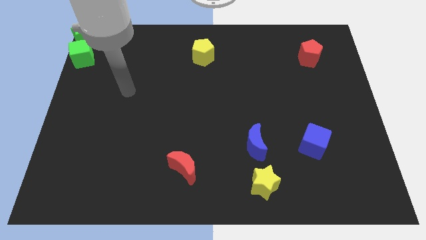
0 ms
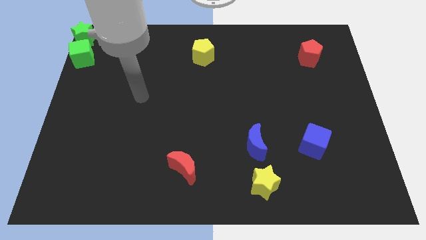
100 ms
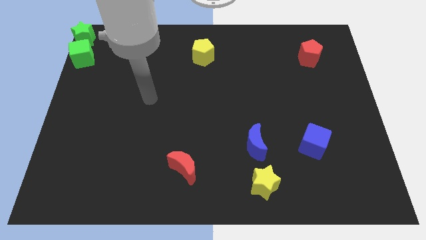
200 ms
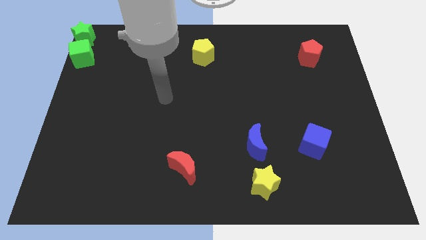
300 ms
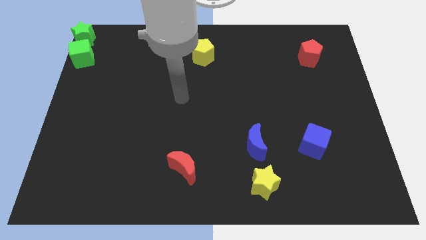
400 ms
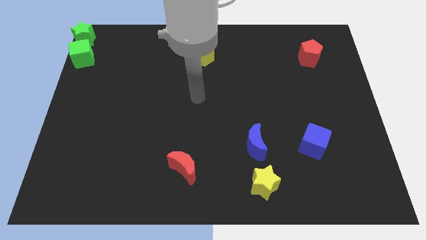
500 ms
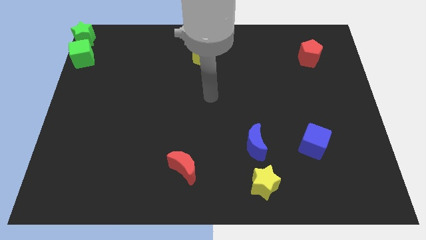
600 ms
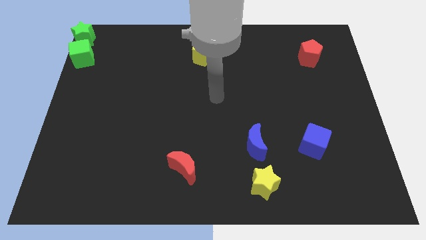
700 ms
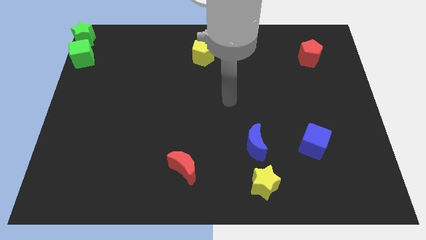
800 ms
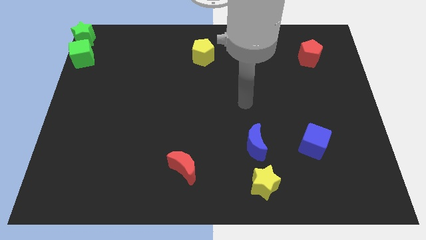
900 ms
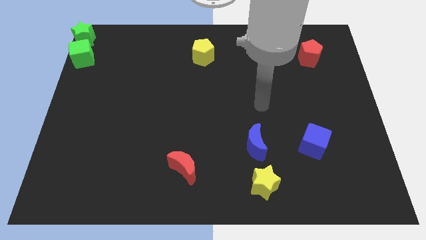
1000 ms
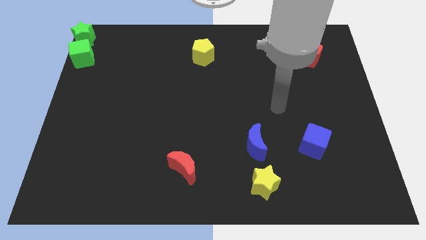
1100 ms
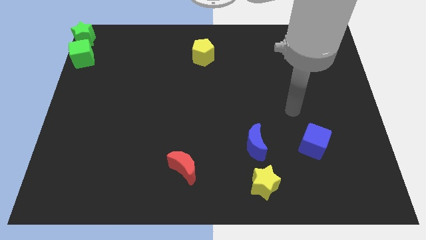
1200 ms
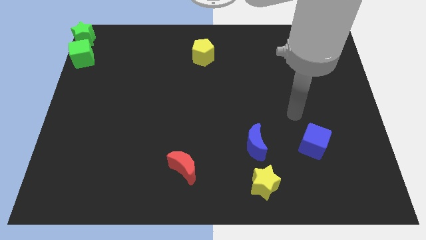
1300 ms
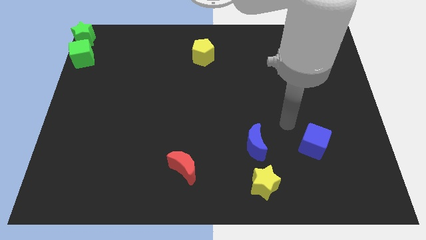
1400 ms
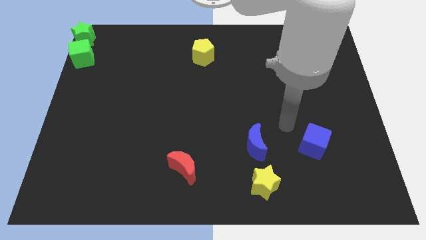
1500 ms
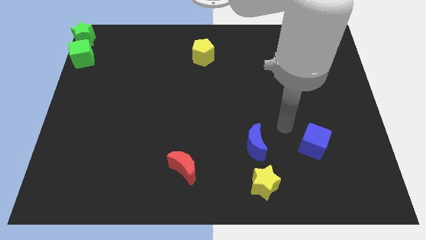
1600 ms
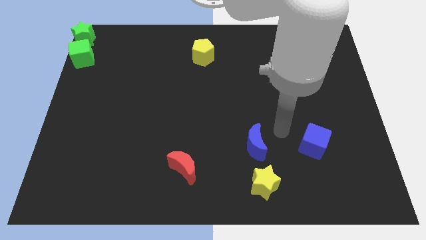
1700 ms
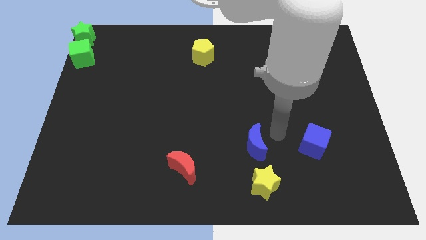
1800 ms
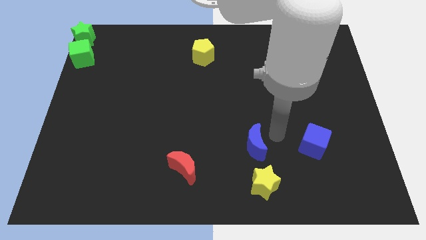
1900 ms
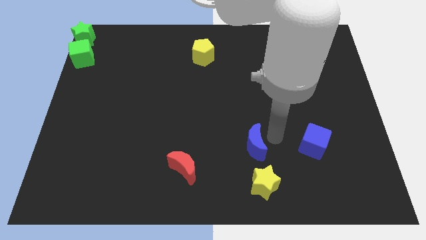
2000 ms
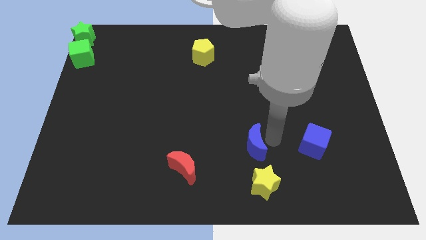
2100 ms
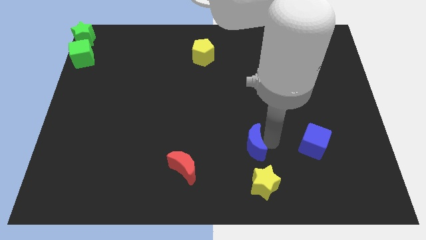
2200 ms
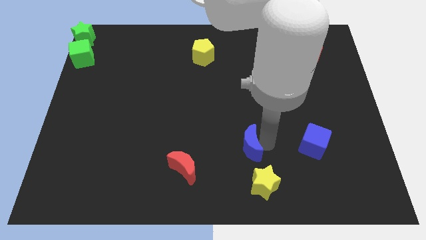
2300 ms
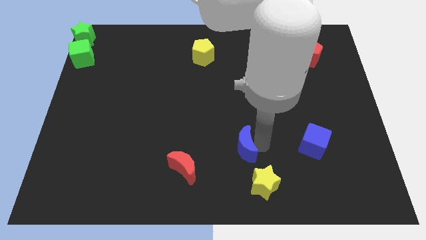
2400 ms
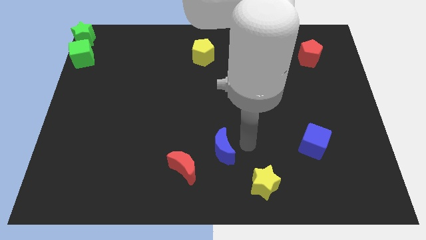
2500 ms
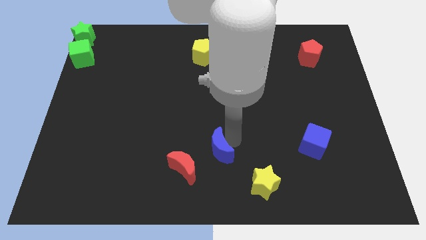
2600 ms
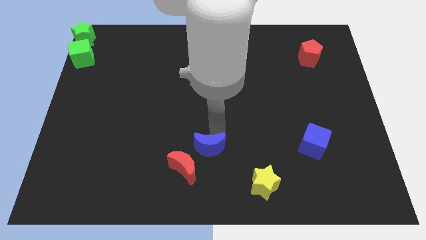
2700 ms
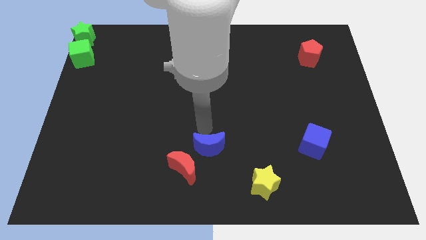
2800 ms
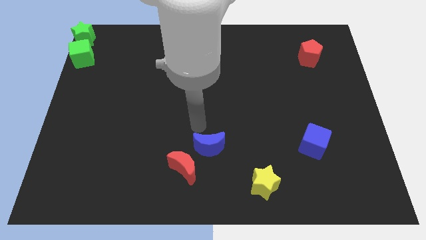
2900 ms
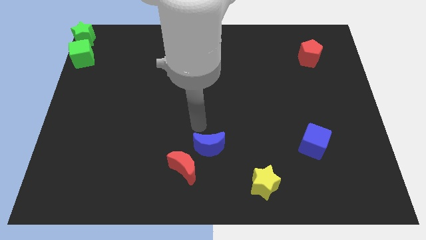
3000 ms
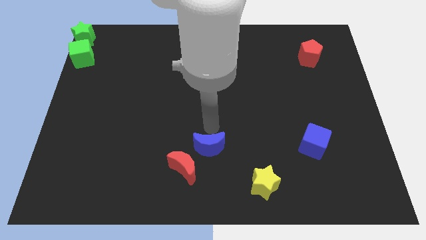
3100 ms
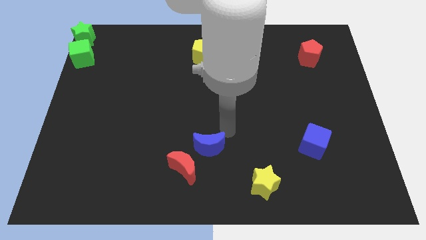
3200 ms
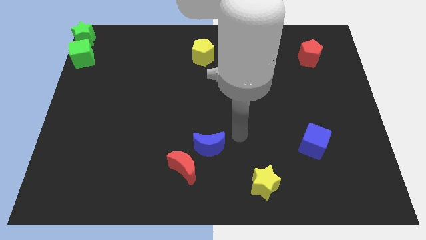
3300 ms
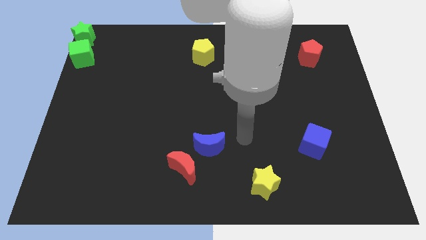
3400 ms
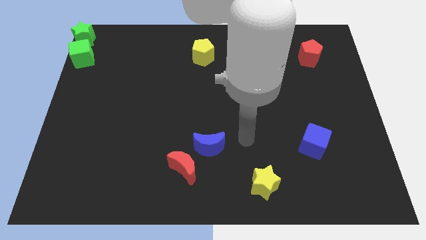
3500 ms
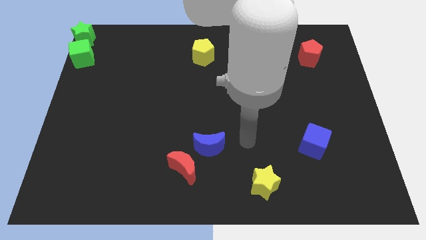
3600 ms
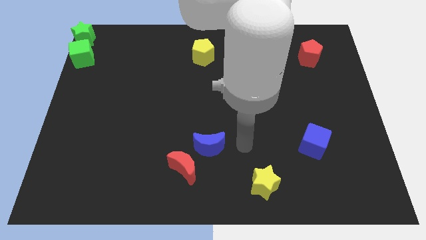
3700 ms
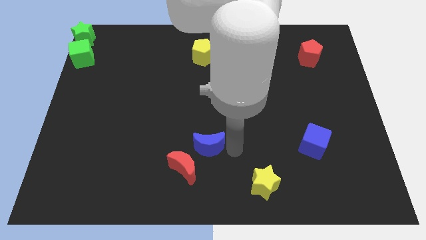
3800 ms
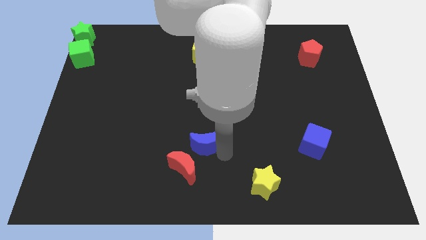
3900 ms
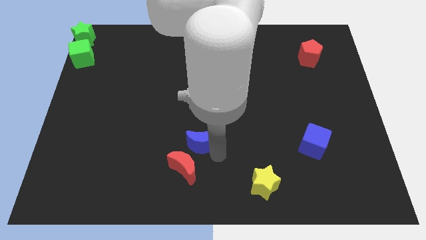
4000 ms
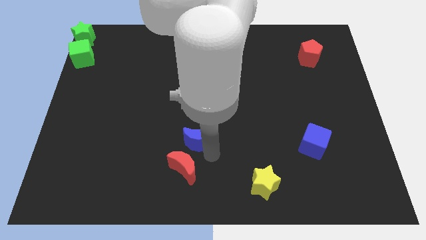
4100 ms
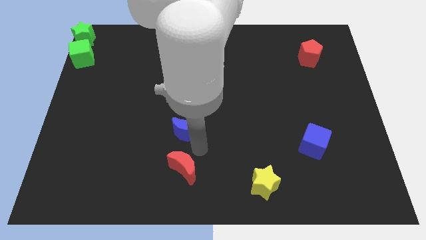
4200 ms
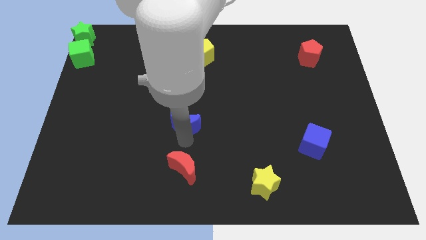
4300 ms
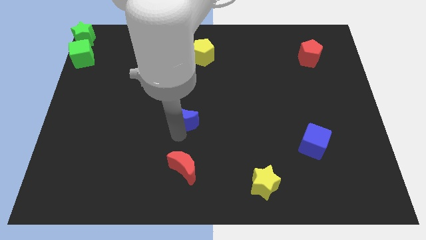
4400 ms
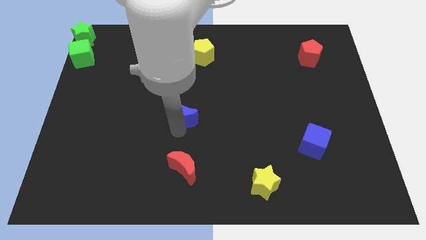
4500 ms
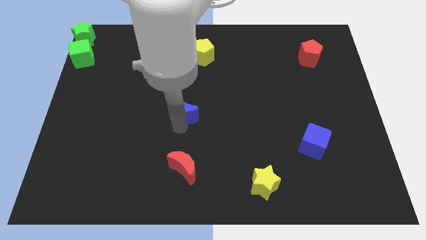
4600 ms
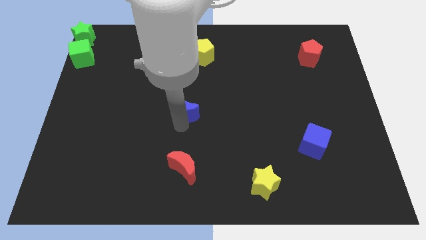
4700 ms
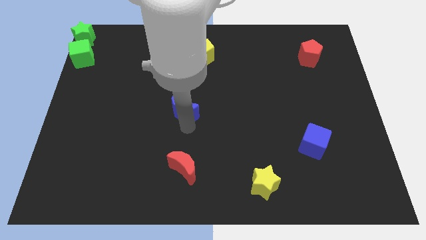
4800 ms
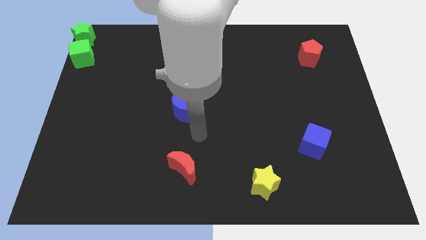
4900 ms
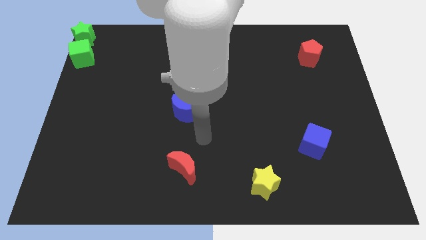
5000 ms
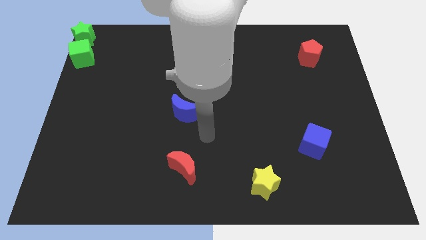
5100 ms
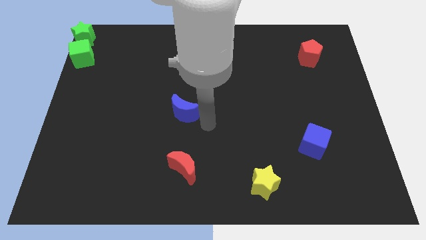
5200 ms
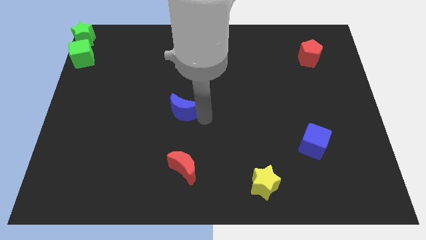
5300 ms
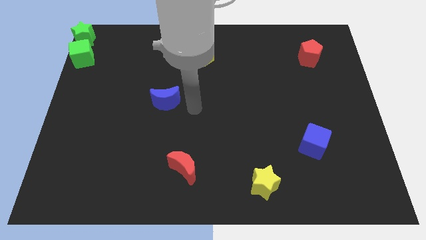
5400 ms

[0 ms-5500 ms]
push the blue crescent to the center of the board

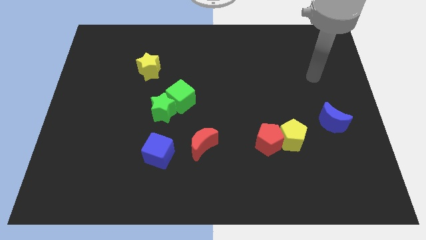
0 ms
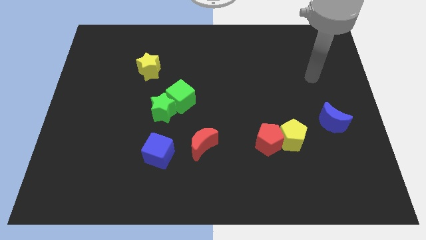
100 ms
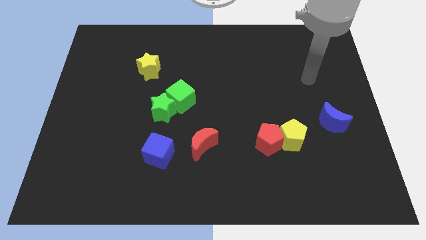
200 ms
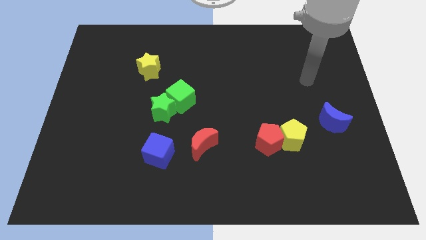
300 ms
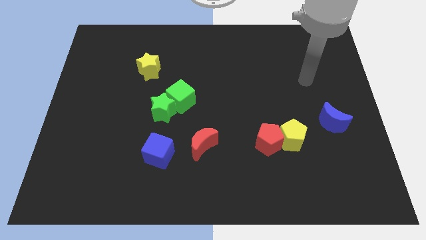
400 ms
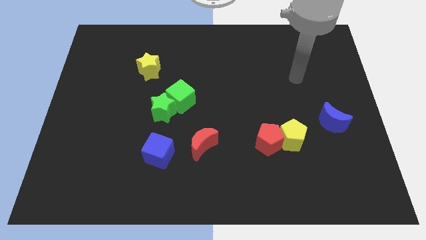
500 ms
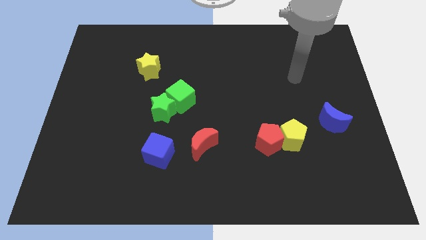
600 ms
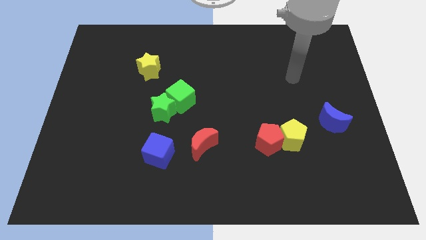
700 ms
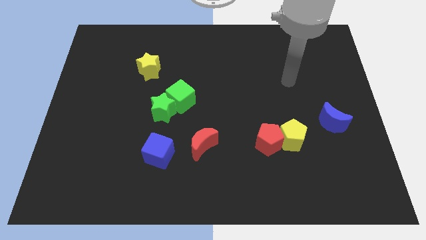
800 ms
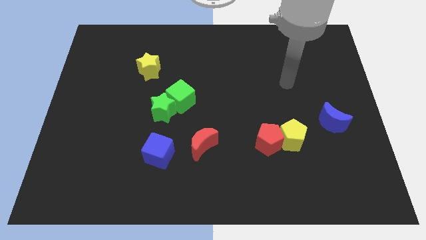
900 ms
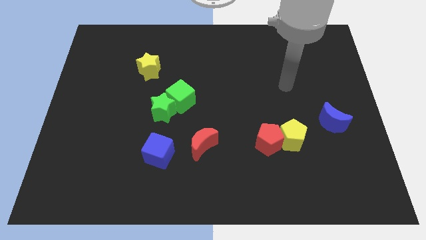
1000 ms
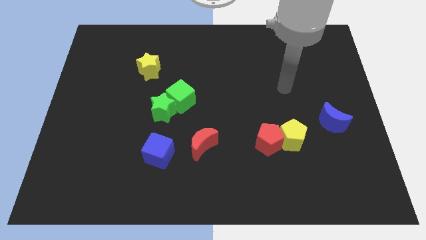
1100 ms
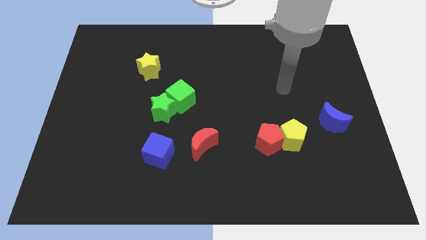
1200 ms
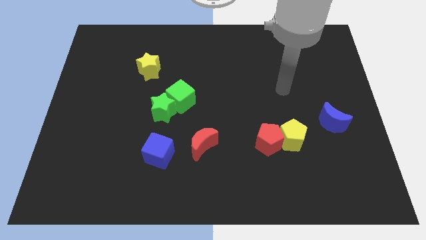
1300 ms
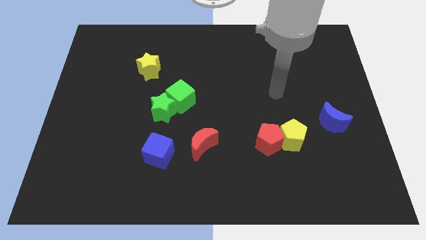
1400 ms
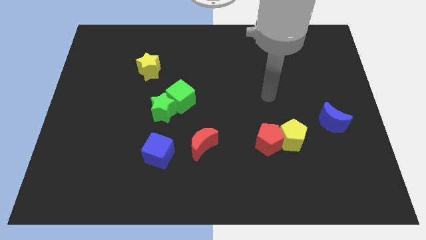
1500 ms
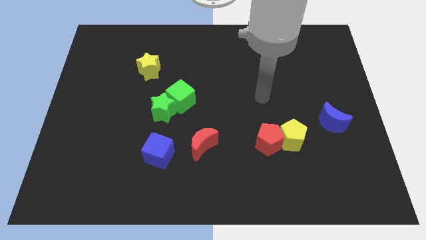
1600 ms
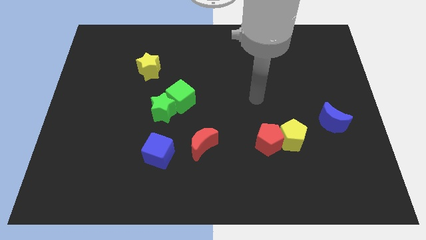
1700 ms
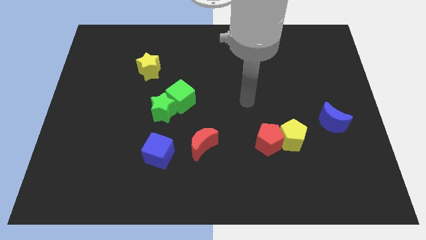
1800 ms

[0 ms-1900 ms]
move your arm towards the red crescent

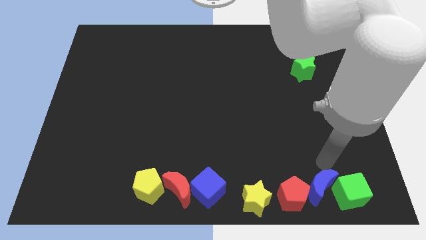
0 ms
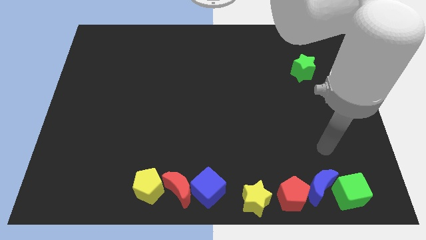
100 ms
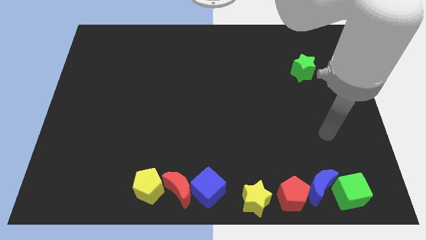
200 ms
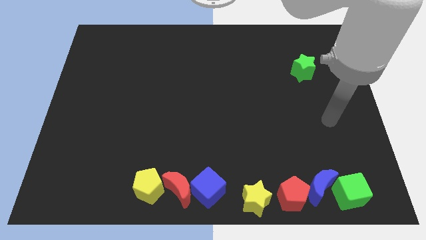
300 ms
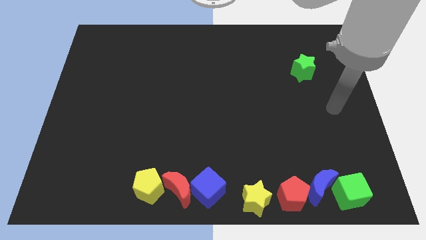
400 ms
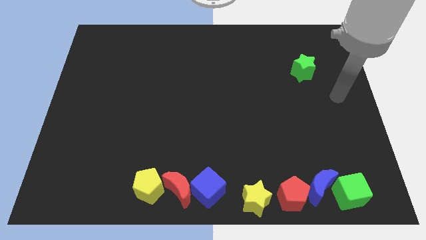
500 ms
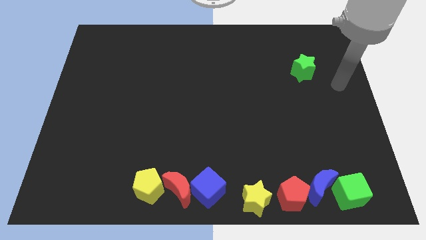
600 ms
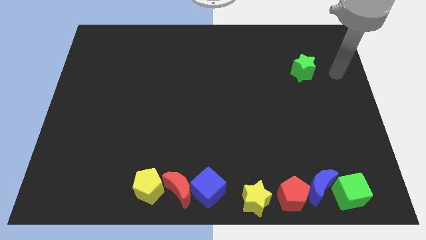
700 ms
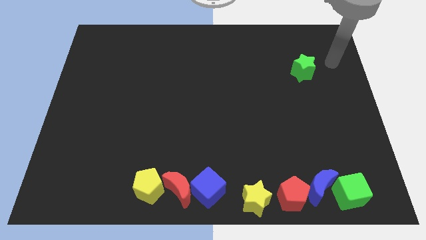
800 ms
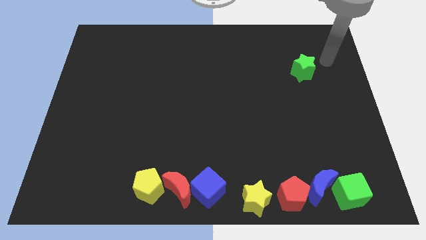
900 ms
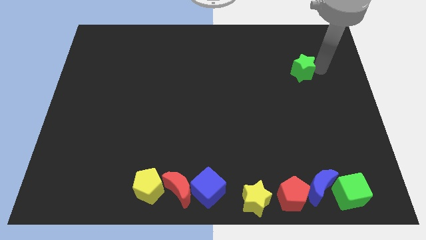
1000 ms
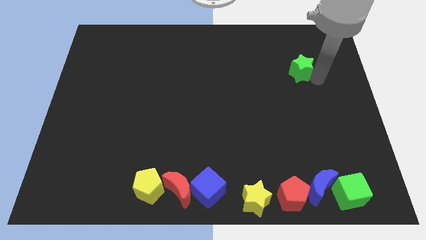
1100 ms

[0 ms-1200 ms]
tap the green star

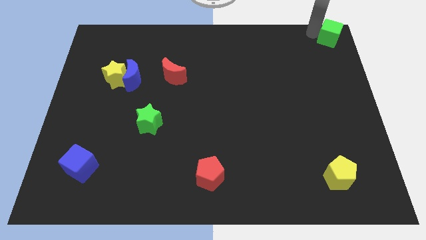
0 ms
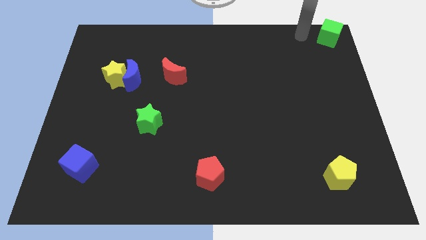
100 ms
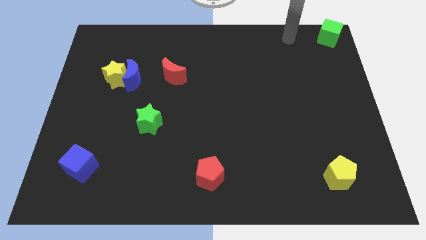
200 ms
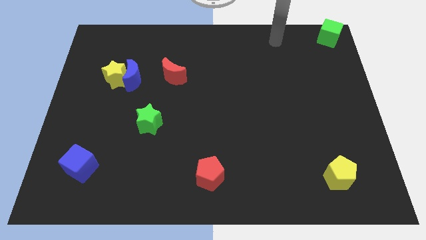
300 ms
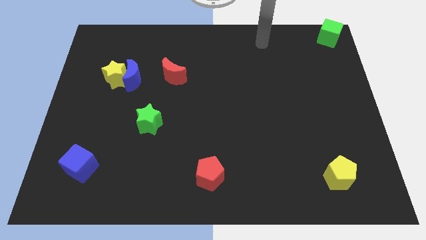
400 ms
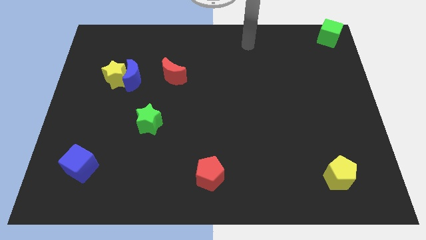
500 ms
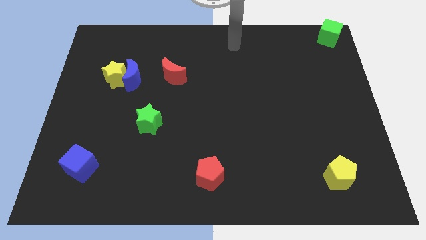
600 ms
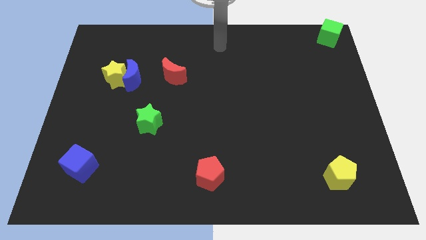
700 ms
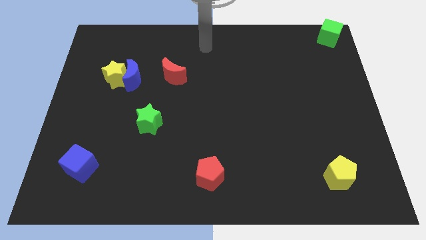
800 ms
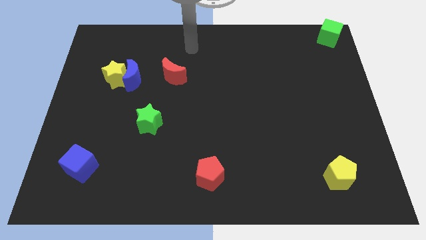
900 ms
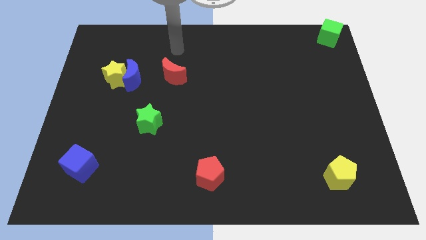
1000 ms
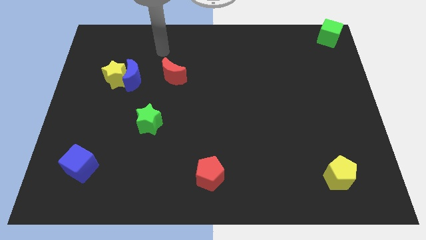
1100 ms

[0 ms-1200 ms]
move your arm towards the top left side of the board
